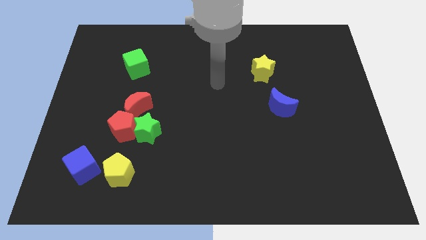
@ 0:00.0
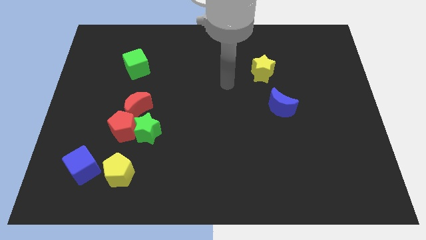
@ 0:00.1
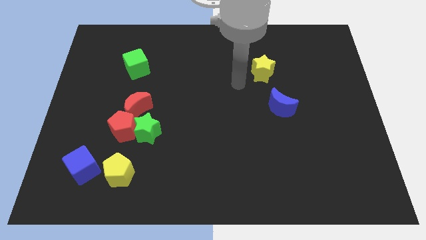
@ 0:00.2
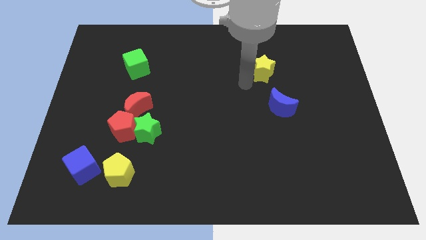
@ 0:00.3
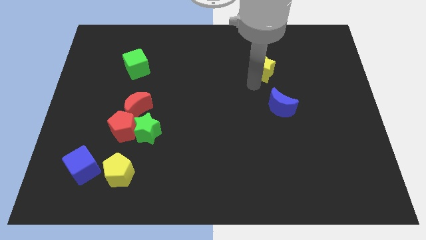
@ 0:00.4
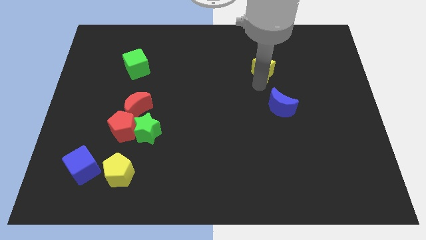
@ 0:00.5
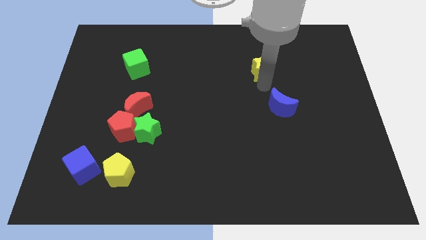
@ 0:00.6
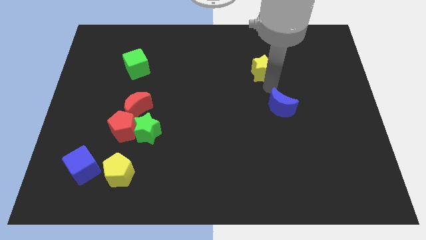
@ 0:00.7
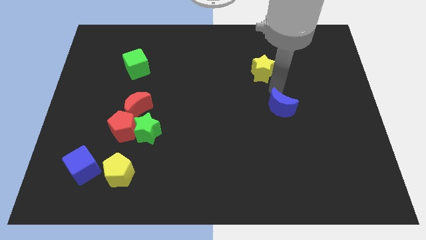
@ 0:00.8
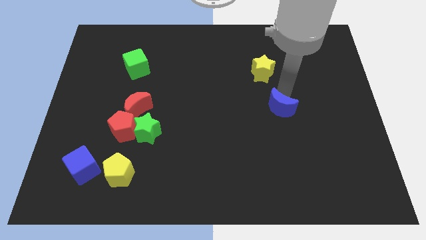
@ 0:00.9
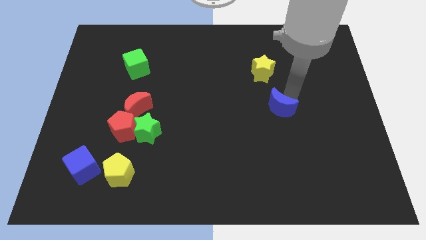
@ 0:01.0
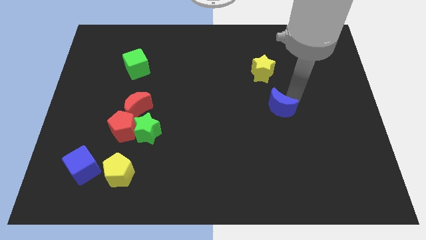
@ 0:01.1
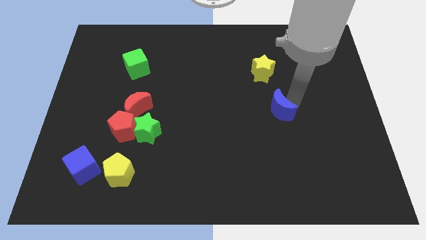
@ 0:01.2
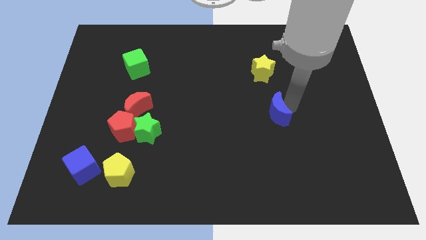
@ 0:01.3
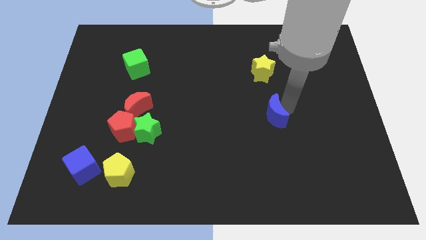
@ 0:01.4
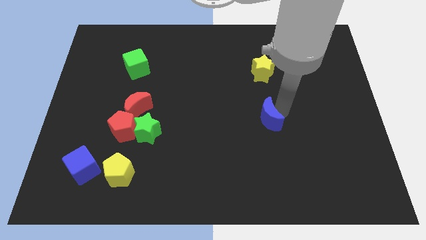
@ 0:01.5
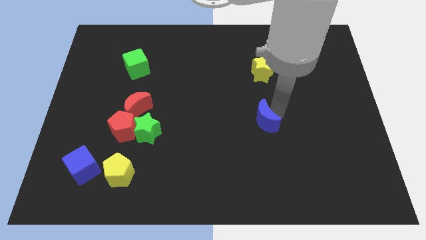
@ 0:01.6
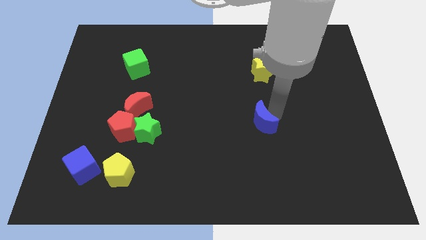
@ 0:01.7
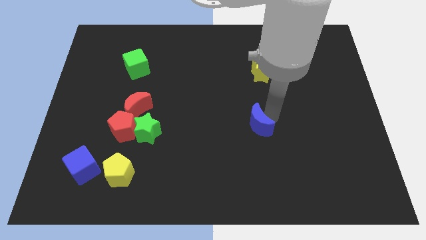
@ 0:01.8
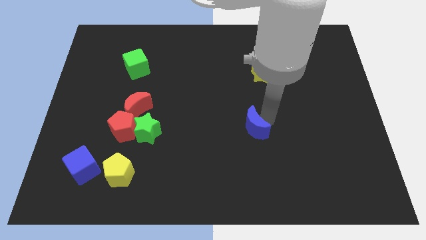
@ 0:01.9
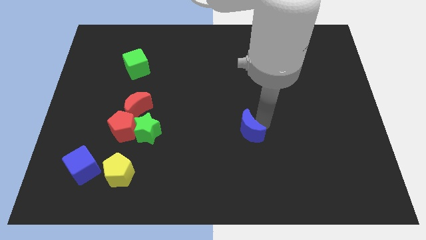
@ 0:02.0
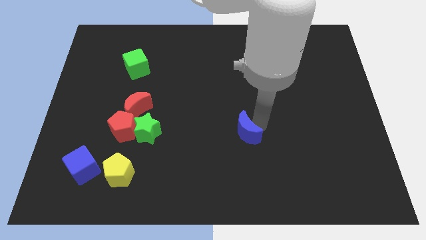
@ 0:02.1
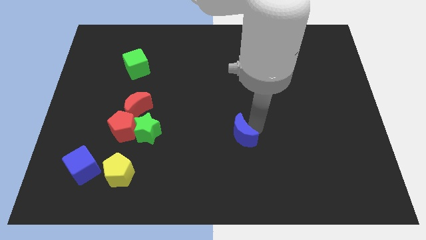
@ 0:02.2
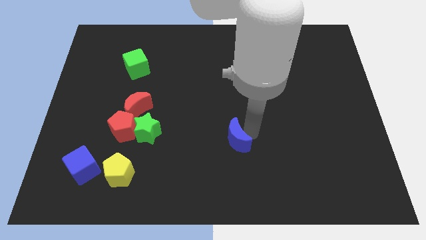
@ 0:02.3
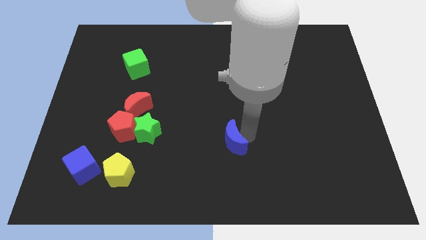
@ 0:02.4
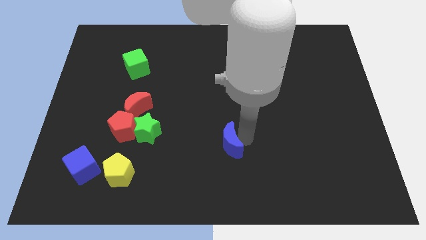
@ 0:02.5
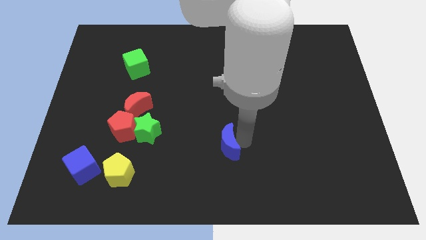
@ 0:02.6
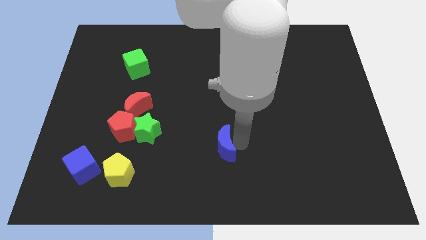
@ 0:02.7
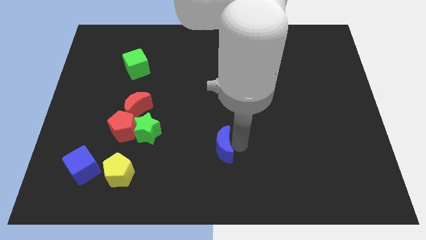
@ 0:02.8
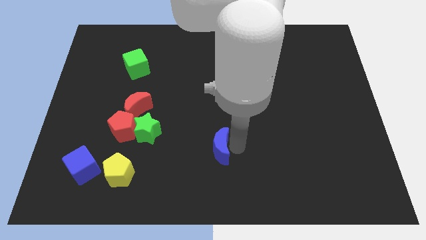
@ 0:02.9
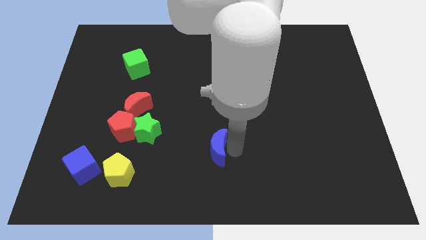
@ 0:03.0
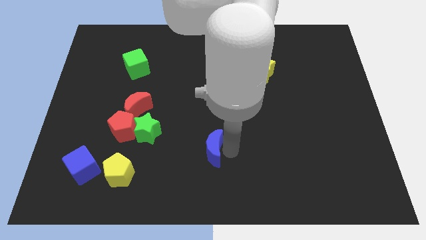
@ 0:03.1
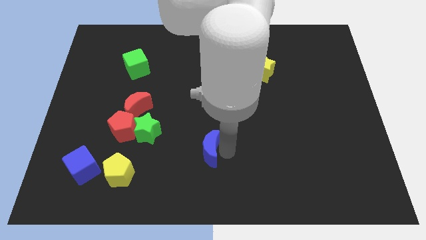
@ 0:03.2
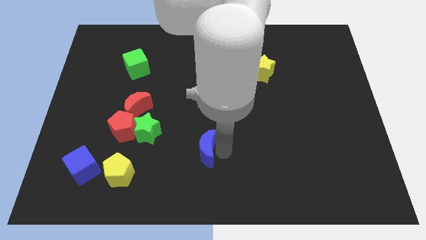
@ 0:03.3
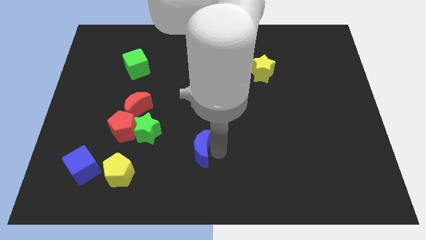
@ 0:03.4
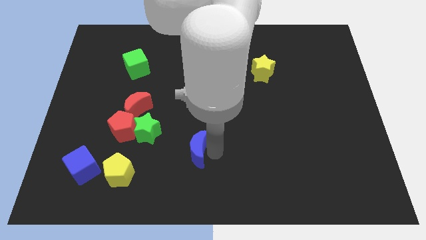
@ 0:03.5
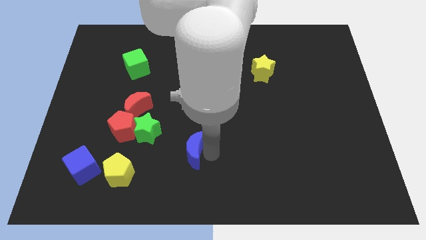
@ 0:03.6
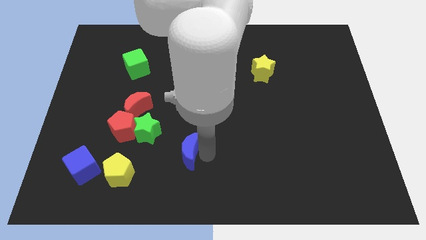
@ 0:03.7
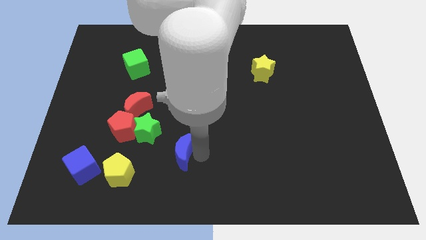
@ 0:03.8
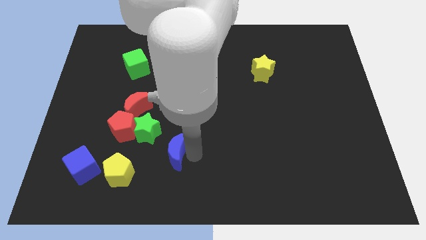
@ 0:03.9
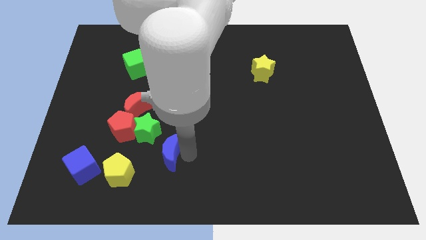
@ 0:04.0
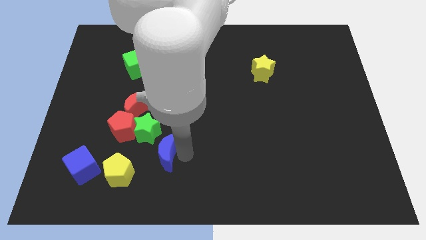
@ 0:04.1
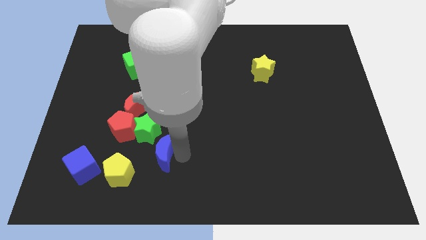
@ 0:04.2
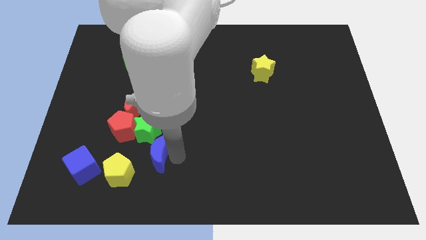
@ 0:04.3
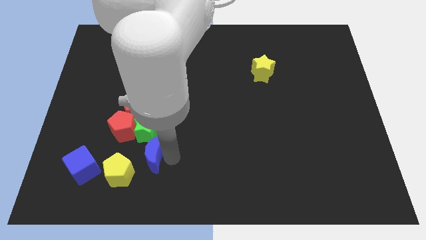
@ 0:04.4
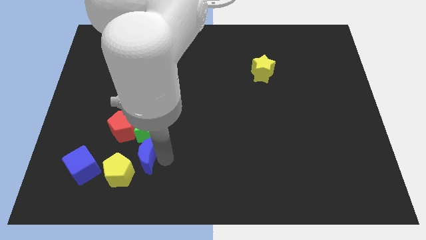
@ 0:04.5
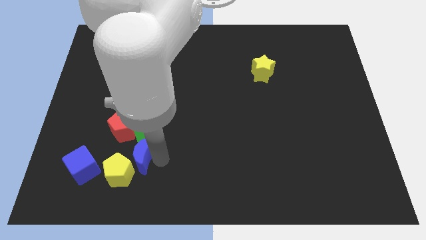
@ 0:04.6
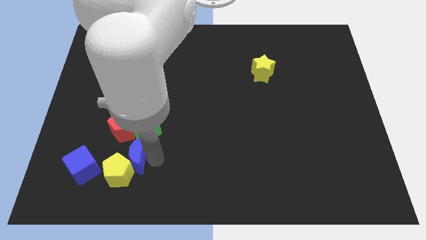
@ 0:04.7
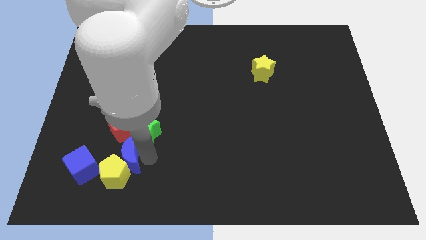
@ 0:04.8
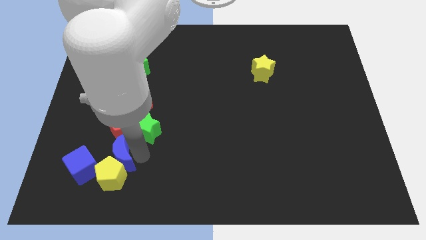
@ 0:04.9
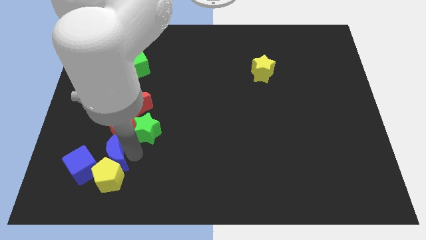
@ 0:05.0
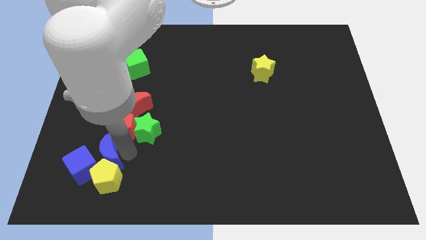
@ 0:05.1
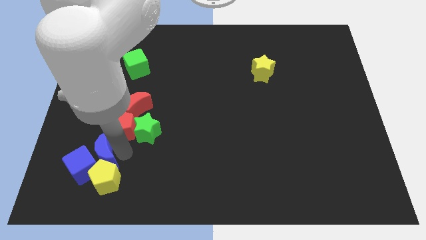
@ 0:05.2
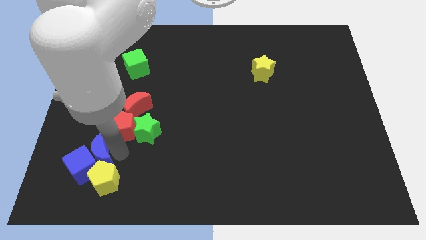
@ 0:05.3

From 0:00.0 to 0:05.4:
slide the blue moon next to the blue cube

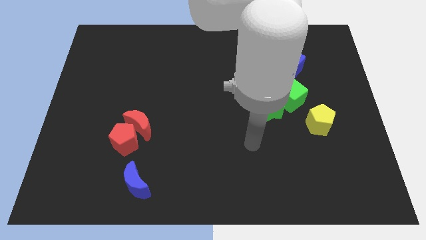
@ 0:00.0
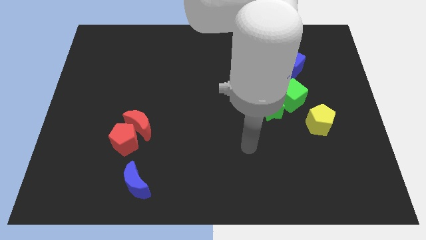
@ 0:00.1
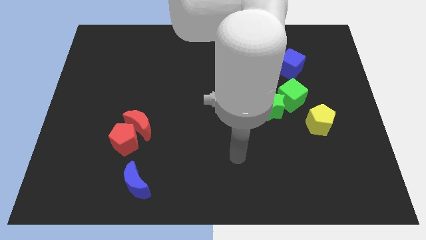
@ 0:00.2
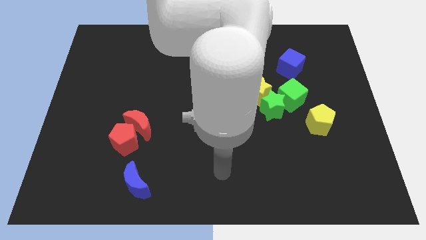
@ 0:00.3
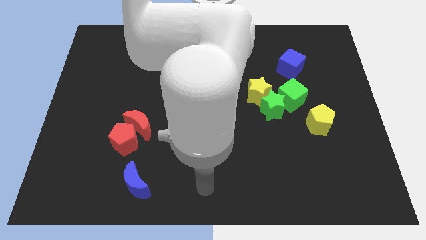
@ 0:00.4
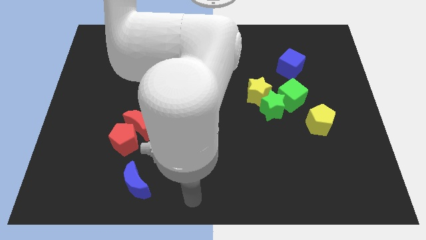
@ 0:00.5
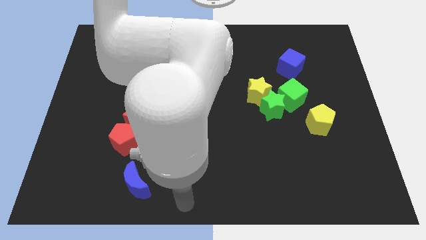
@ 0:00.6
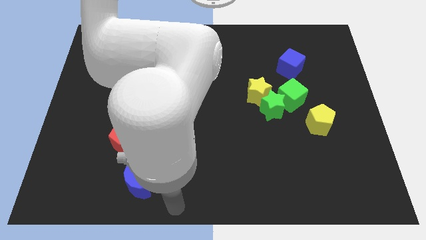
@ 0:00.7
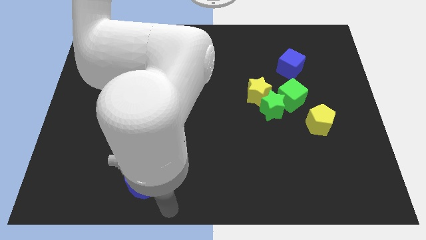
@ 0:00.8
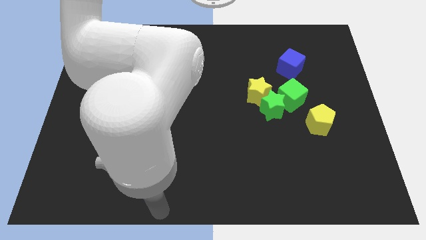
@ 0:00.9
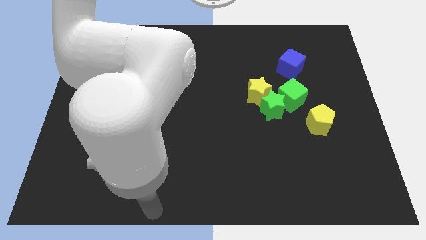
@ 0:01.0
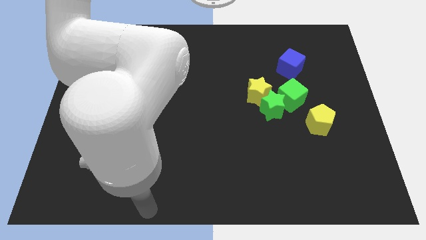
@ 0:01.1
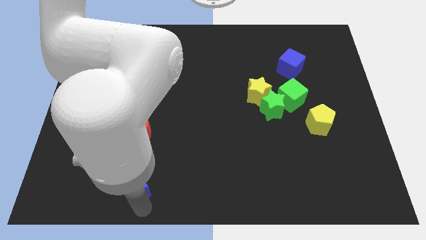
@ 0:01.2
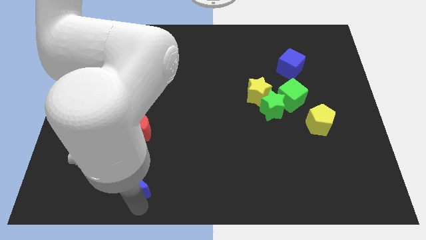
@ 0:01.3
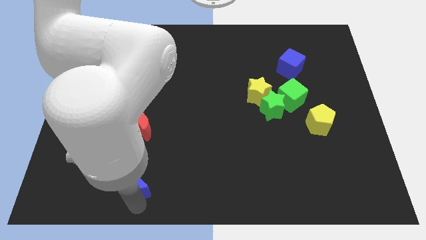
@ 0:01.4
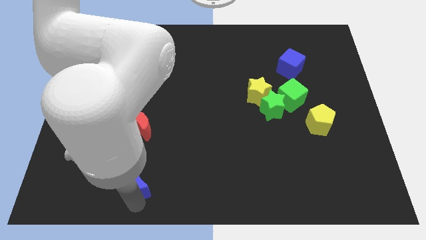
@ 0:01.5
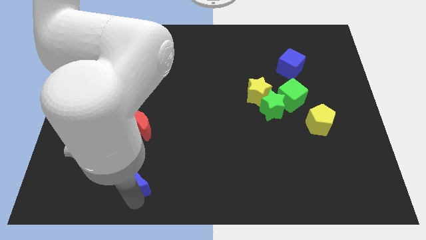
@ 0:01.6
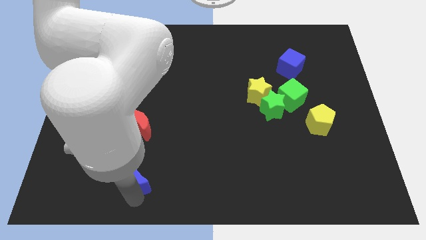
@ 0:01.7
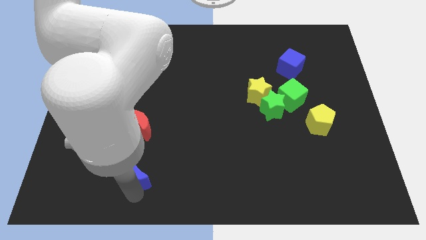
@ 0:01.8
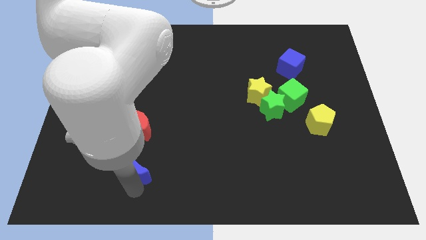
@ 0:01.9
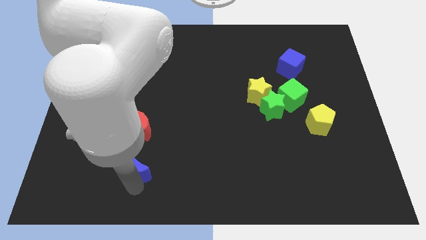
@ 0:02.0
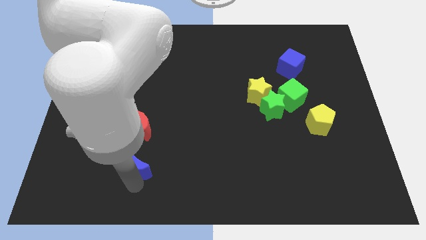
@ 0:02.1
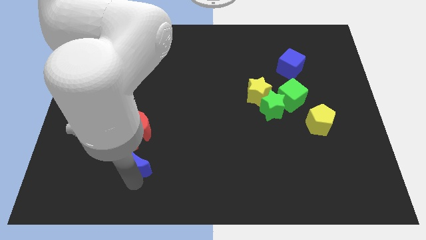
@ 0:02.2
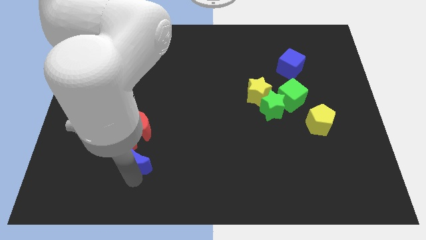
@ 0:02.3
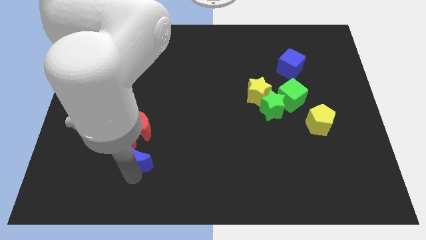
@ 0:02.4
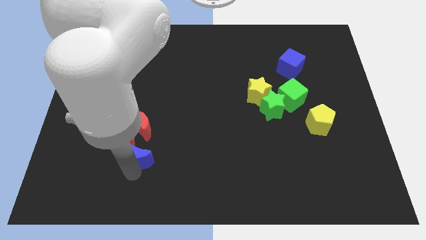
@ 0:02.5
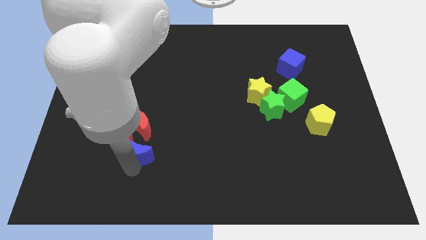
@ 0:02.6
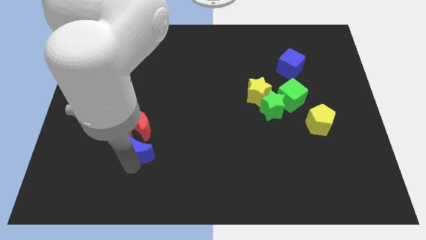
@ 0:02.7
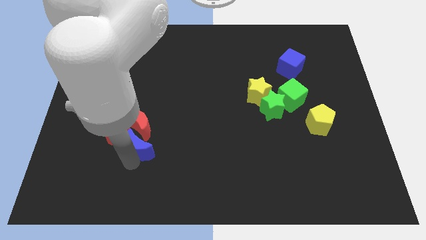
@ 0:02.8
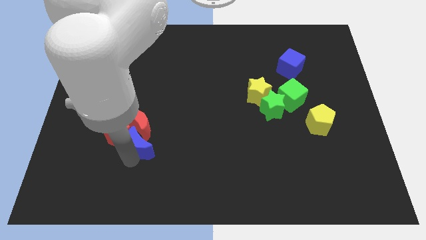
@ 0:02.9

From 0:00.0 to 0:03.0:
slide the blue moon to the red pentagon
